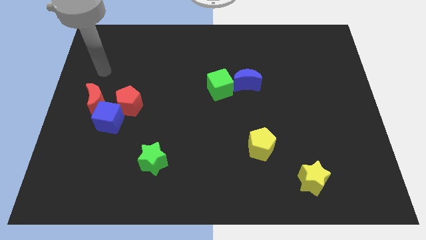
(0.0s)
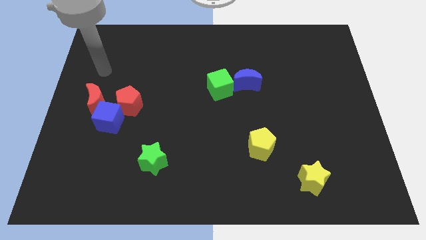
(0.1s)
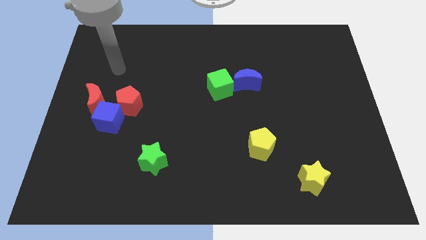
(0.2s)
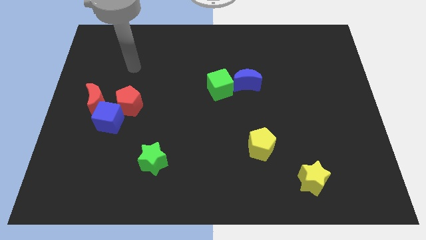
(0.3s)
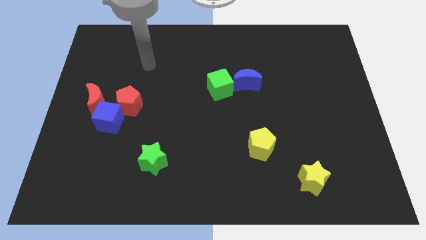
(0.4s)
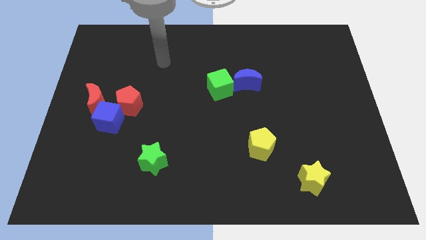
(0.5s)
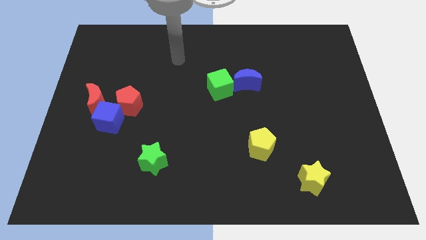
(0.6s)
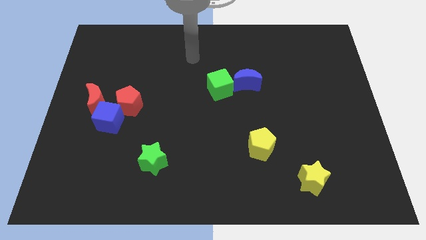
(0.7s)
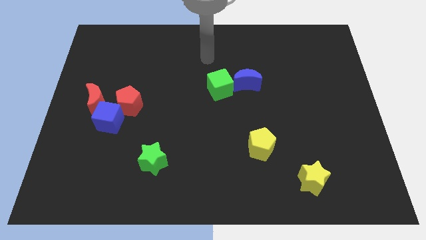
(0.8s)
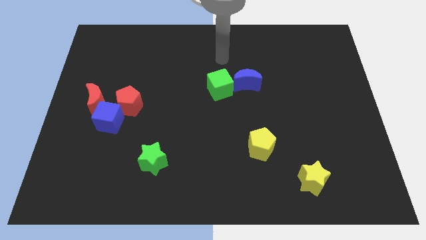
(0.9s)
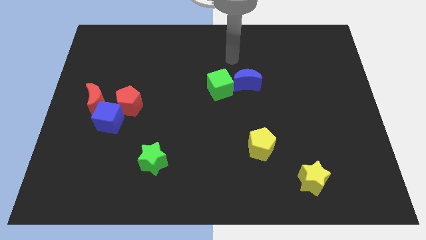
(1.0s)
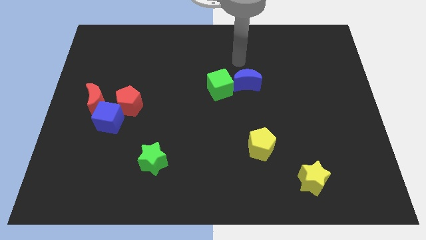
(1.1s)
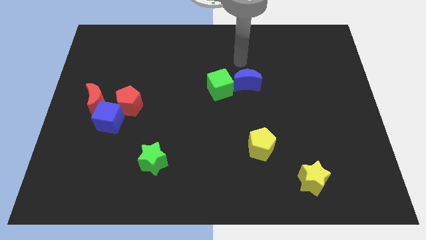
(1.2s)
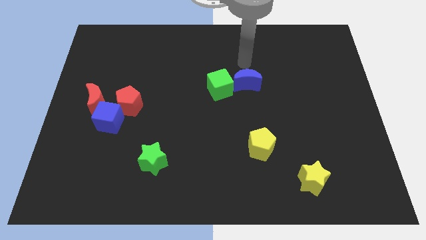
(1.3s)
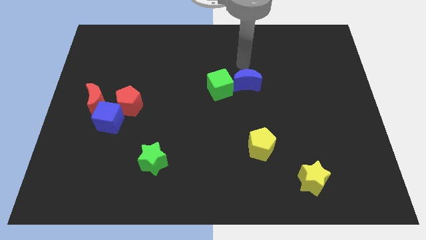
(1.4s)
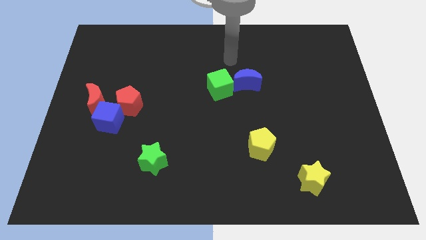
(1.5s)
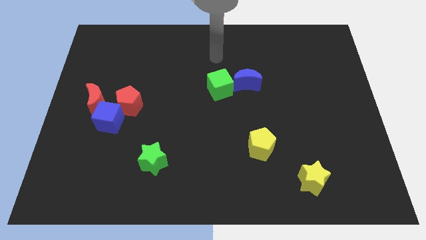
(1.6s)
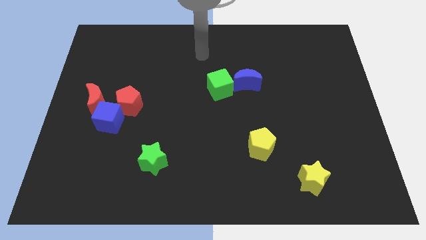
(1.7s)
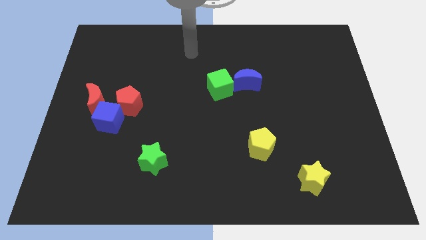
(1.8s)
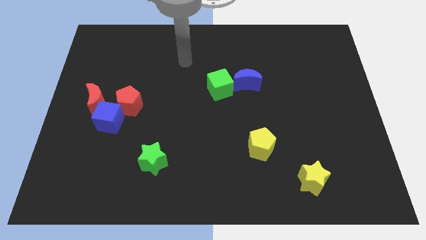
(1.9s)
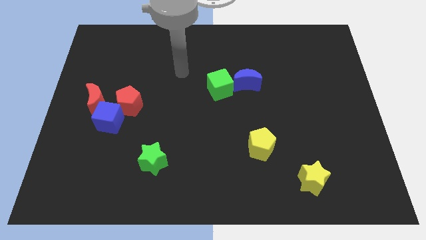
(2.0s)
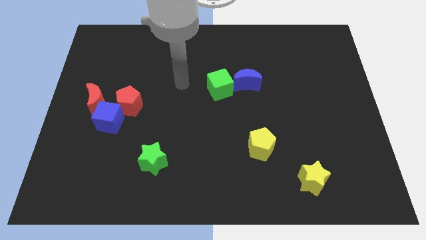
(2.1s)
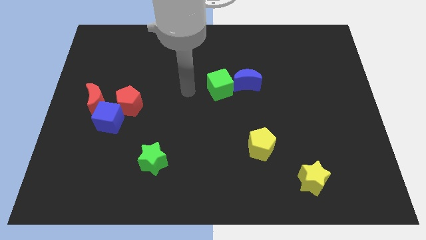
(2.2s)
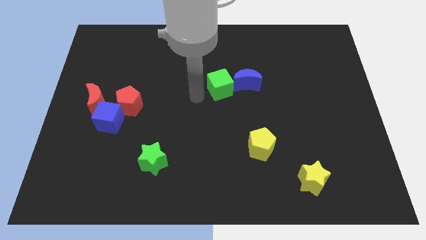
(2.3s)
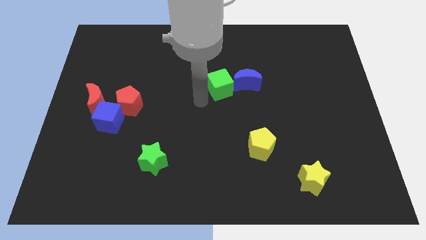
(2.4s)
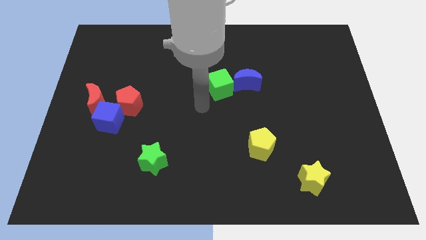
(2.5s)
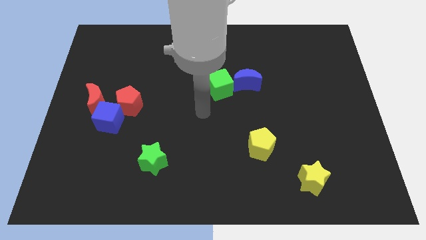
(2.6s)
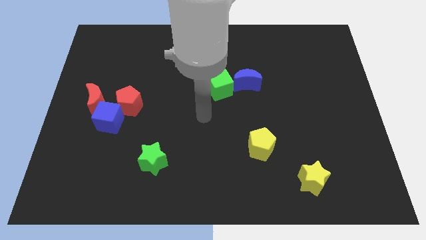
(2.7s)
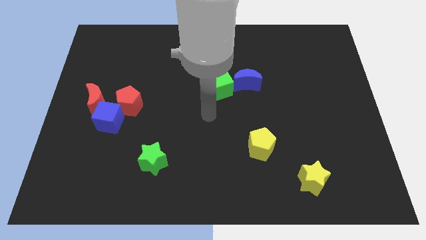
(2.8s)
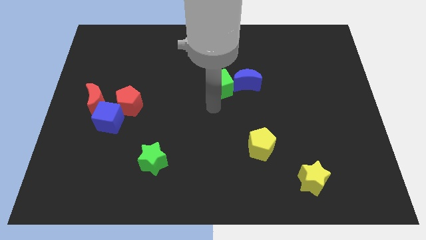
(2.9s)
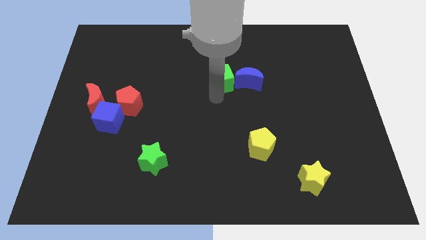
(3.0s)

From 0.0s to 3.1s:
tap the bottom side of the green cube

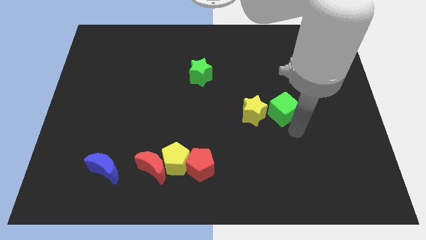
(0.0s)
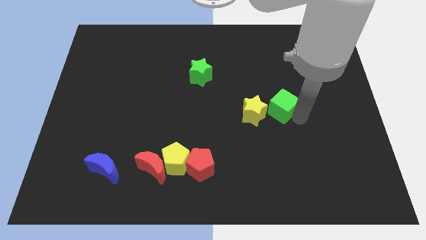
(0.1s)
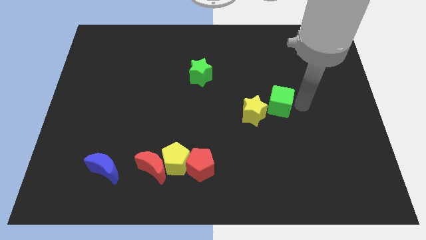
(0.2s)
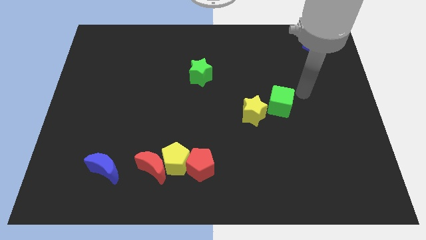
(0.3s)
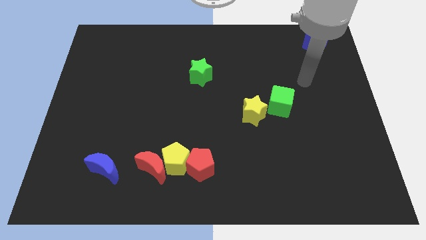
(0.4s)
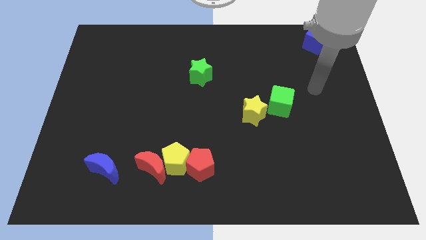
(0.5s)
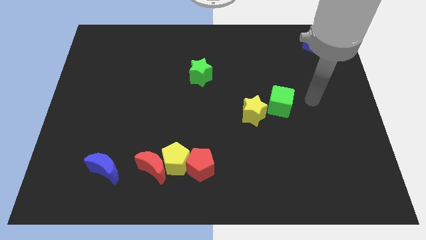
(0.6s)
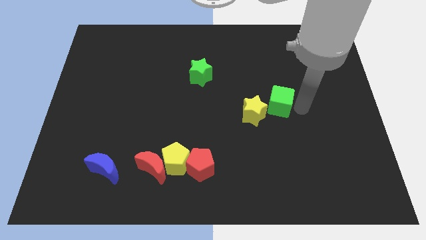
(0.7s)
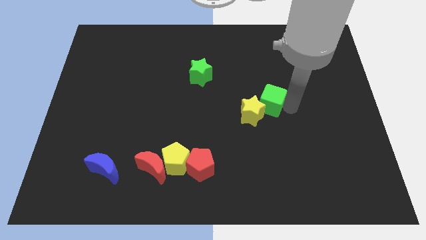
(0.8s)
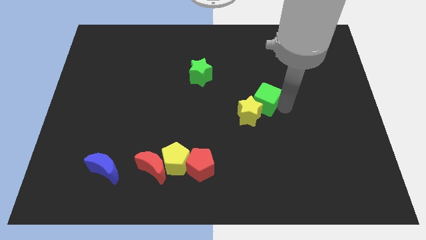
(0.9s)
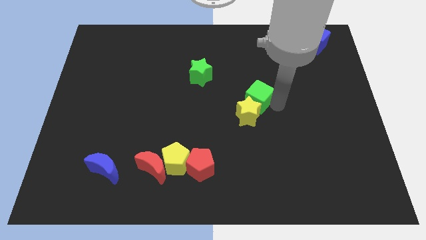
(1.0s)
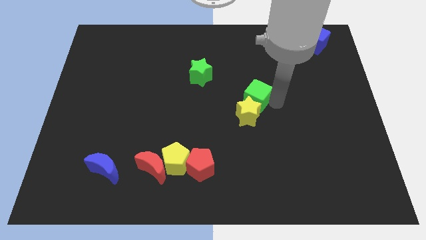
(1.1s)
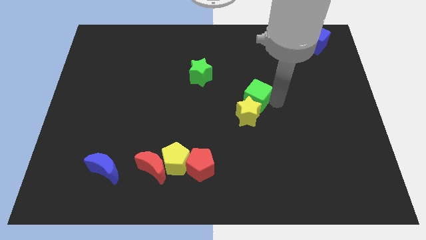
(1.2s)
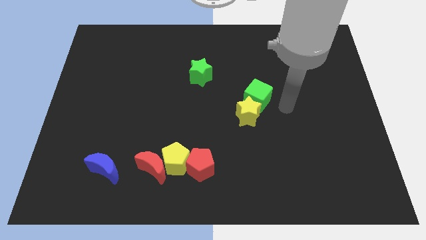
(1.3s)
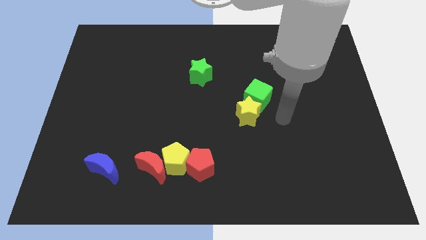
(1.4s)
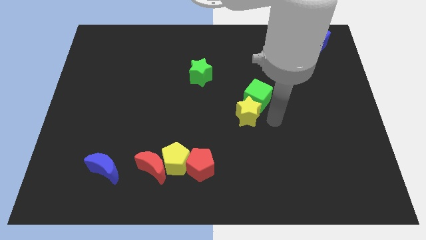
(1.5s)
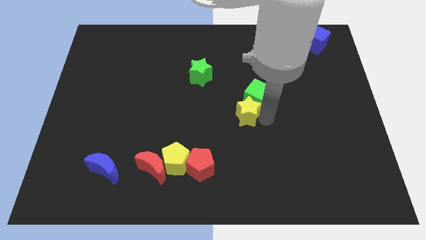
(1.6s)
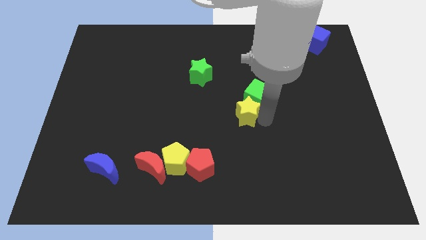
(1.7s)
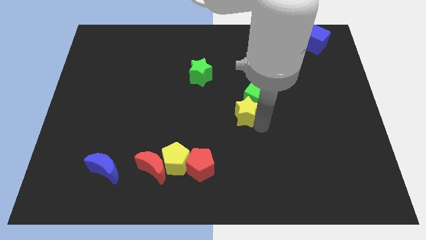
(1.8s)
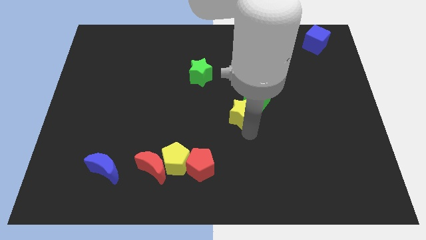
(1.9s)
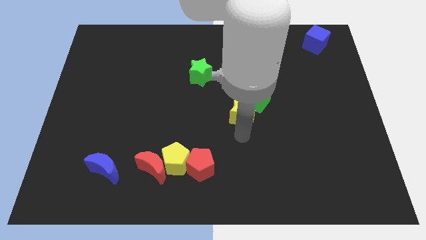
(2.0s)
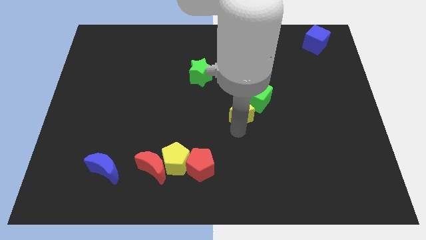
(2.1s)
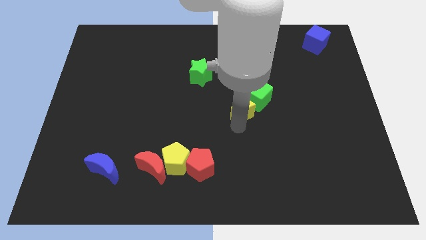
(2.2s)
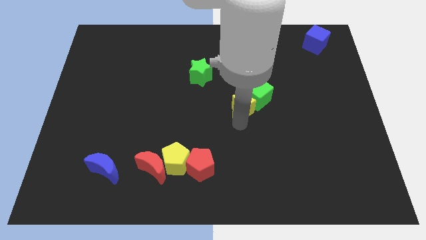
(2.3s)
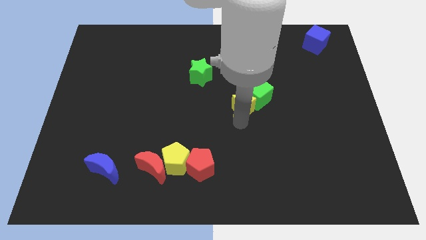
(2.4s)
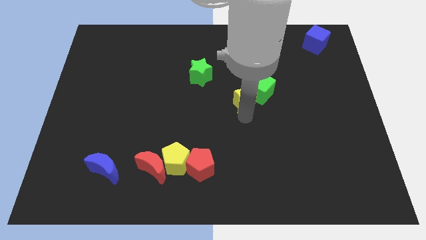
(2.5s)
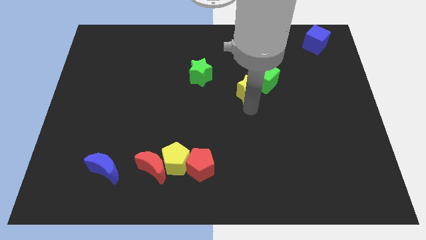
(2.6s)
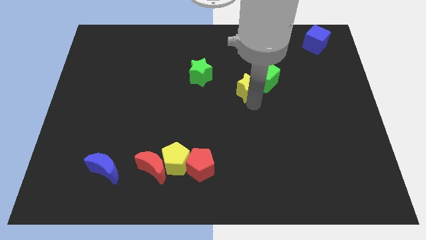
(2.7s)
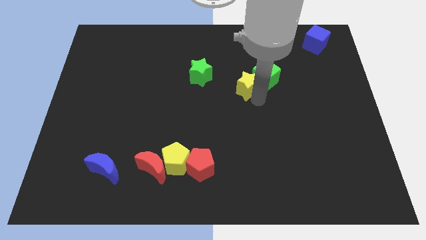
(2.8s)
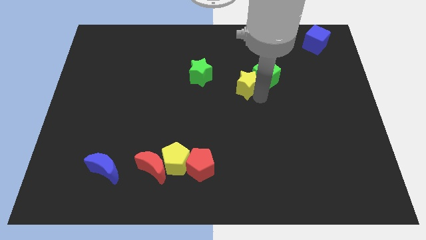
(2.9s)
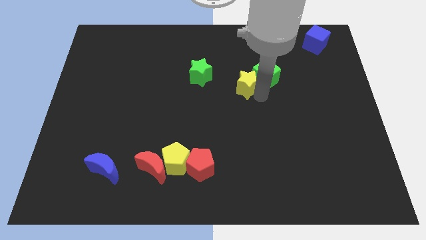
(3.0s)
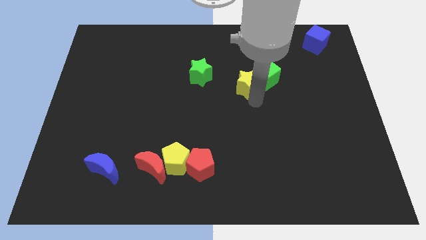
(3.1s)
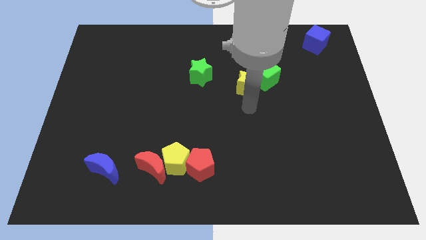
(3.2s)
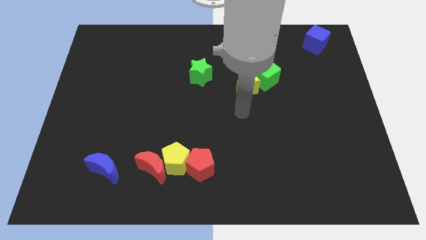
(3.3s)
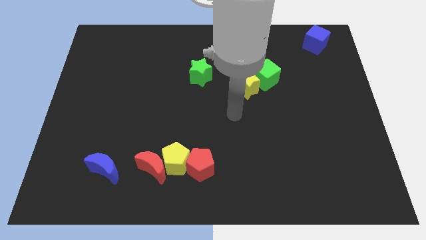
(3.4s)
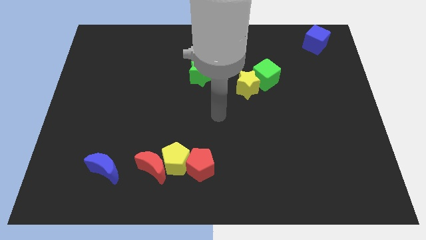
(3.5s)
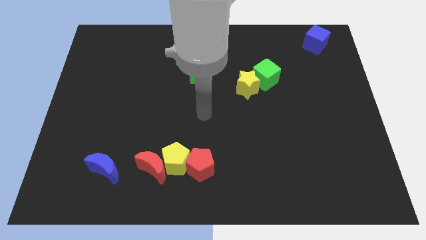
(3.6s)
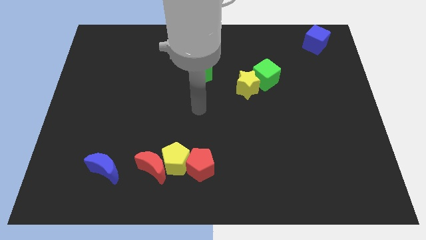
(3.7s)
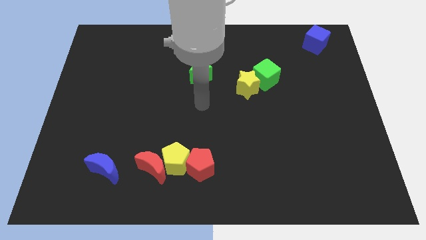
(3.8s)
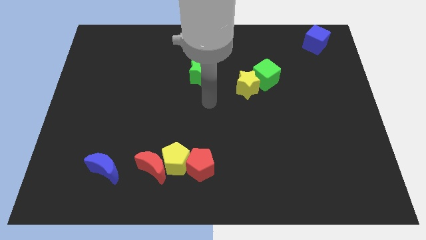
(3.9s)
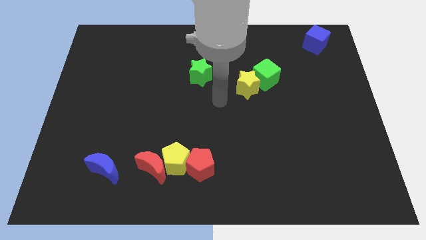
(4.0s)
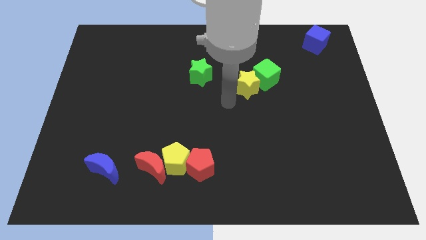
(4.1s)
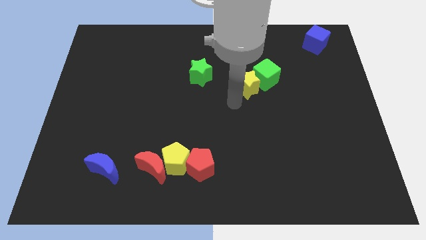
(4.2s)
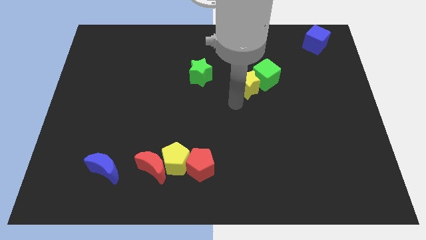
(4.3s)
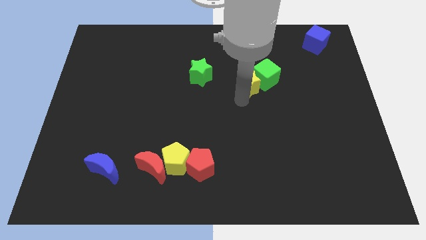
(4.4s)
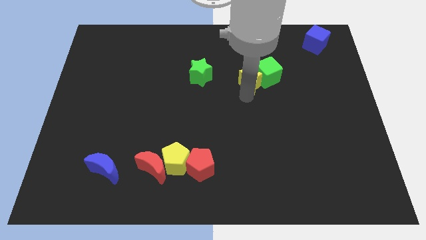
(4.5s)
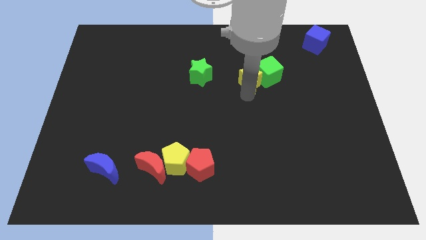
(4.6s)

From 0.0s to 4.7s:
push yellow star into green cube

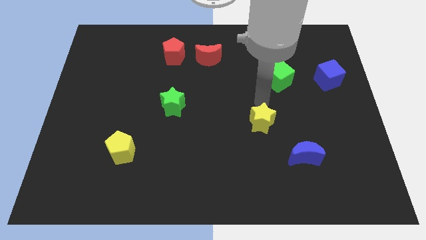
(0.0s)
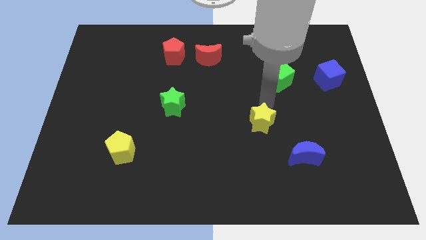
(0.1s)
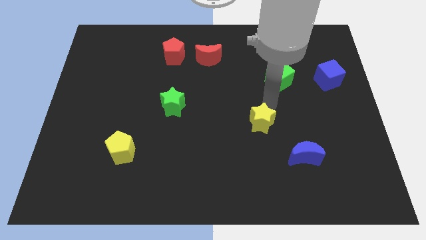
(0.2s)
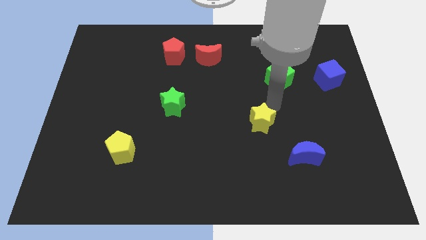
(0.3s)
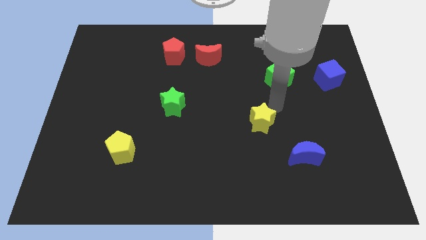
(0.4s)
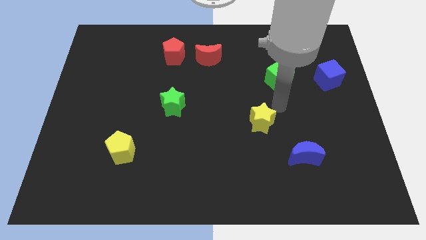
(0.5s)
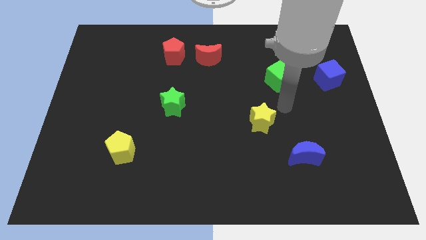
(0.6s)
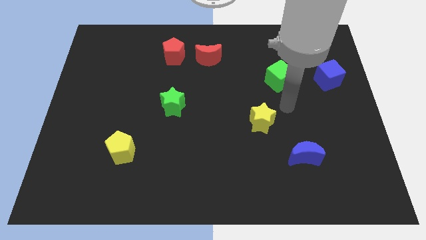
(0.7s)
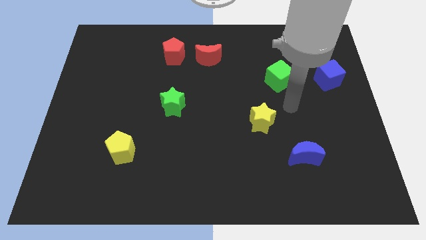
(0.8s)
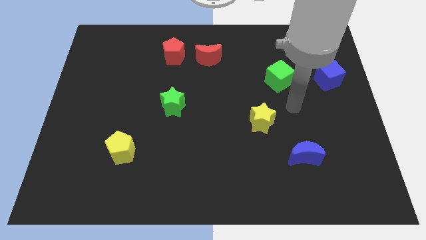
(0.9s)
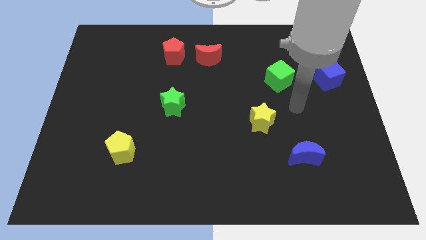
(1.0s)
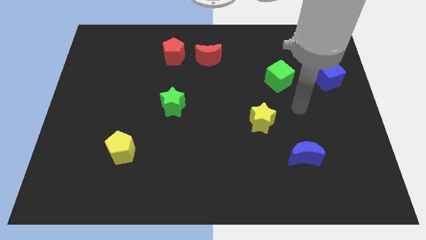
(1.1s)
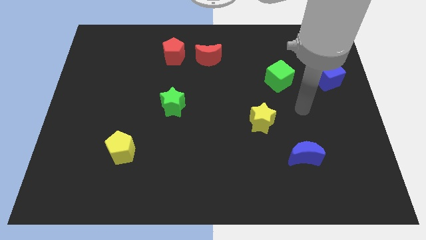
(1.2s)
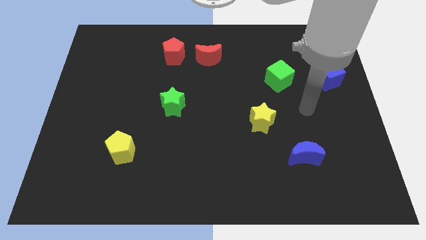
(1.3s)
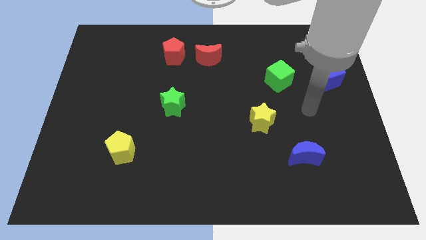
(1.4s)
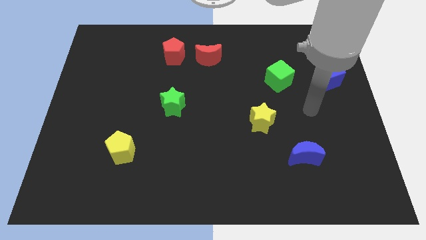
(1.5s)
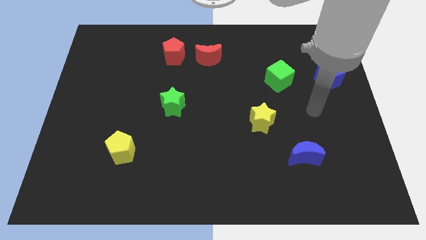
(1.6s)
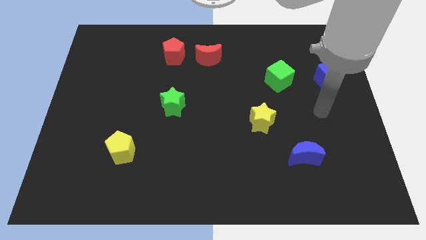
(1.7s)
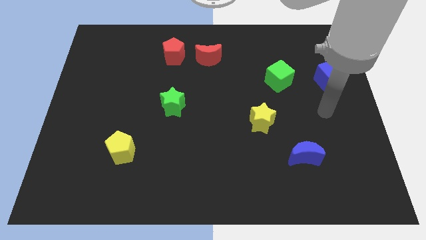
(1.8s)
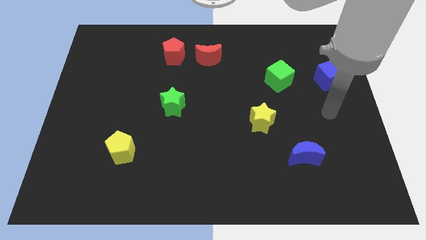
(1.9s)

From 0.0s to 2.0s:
go away from the yellow star
